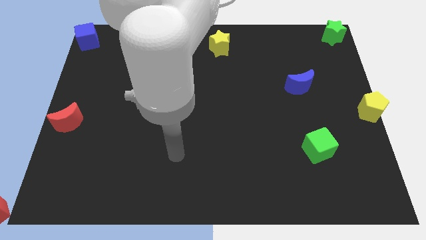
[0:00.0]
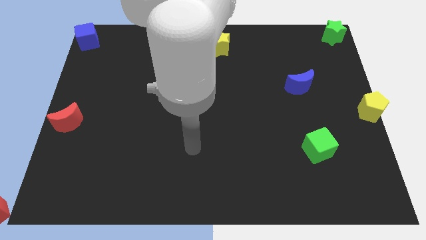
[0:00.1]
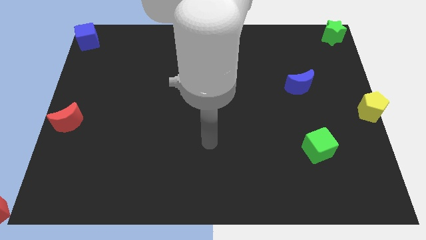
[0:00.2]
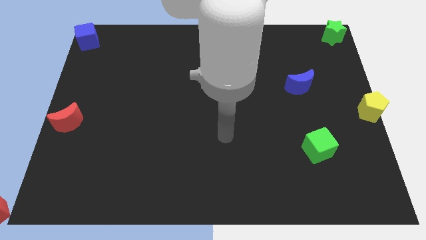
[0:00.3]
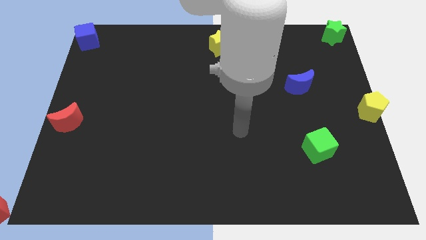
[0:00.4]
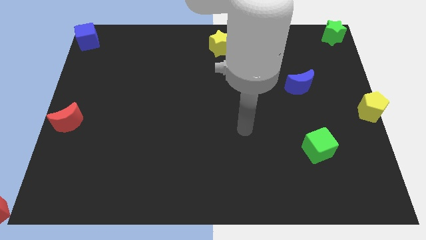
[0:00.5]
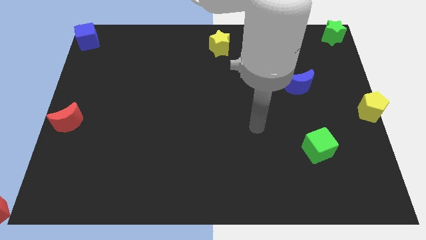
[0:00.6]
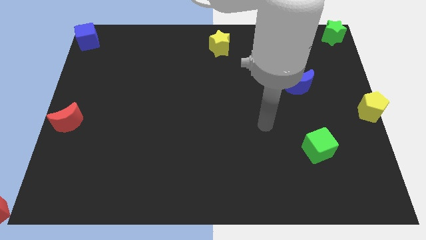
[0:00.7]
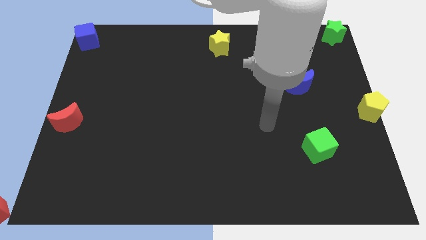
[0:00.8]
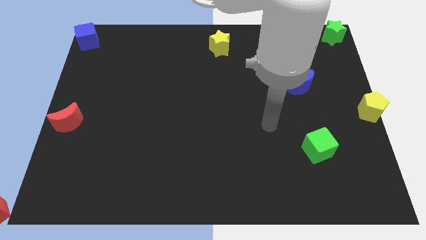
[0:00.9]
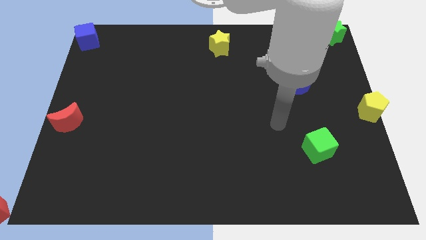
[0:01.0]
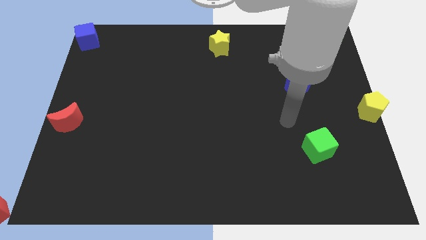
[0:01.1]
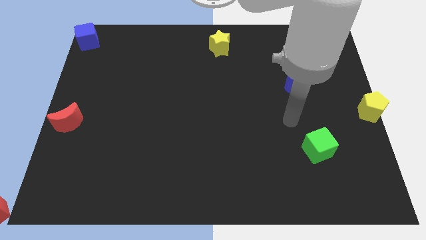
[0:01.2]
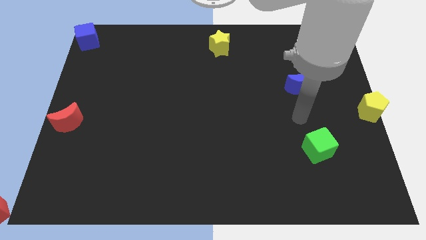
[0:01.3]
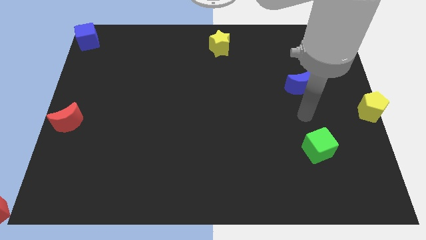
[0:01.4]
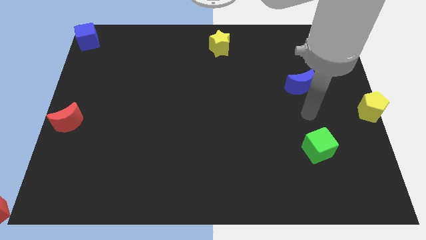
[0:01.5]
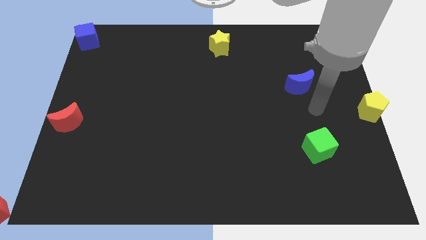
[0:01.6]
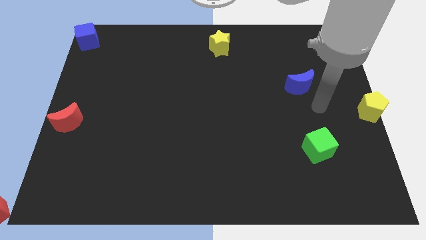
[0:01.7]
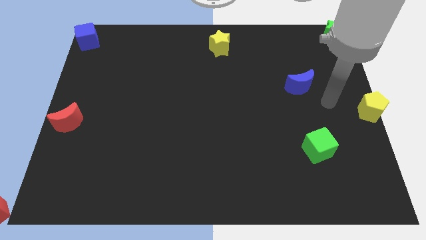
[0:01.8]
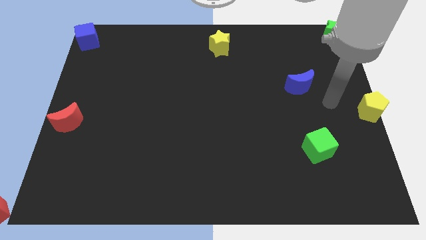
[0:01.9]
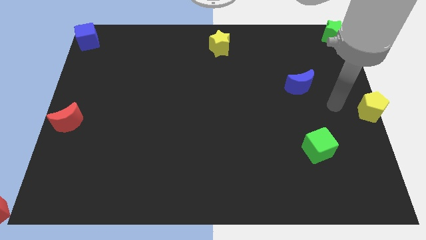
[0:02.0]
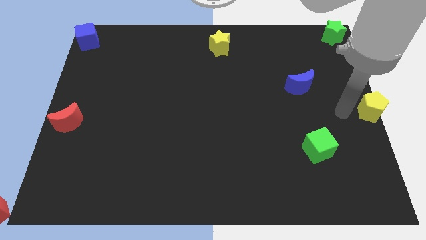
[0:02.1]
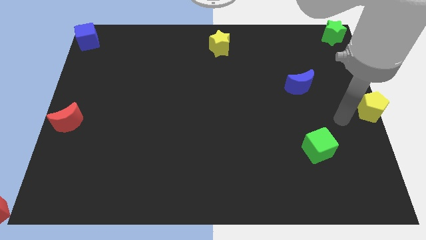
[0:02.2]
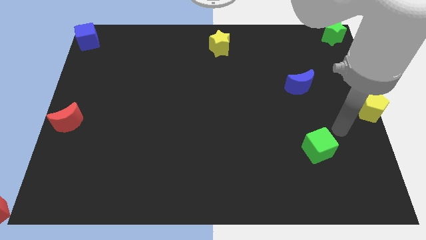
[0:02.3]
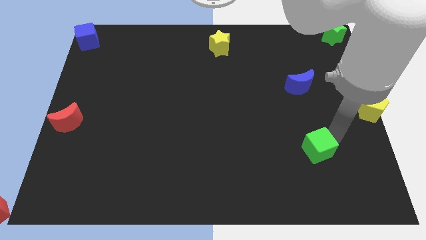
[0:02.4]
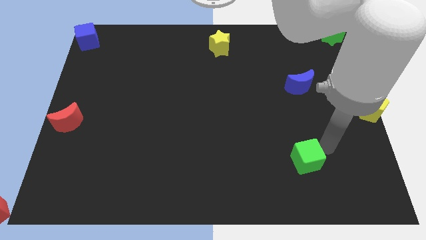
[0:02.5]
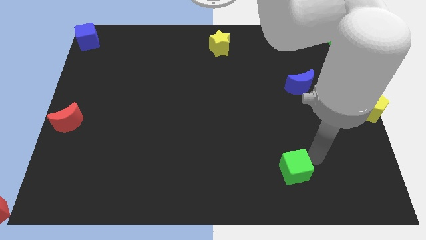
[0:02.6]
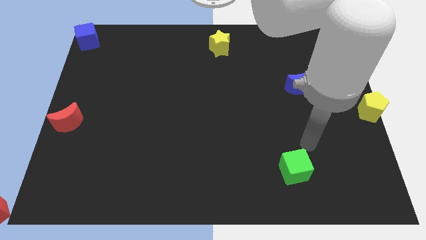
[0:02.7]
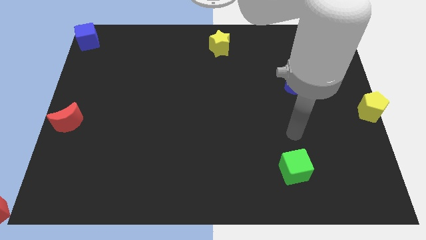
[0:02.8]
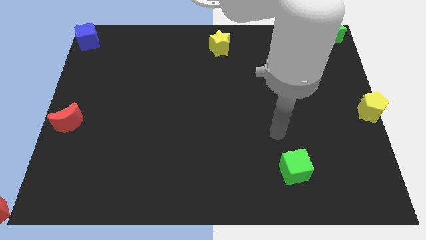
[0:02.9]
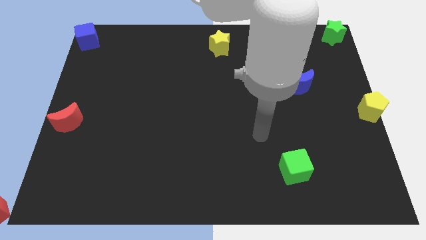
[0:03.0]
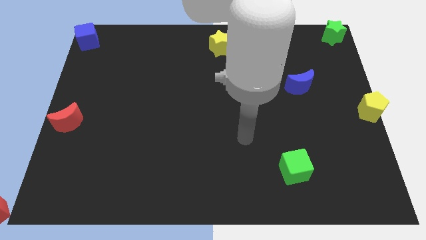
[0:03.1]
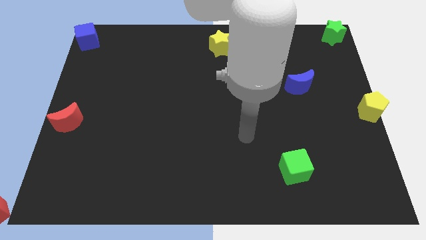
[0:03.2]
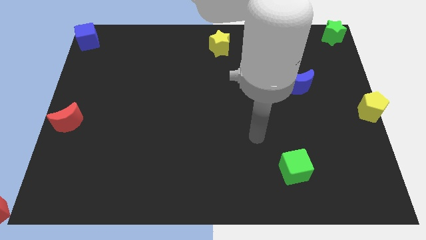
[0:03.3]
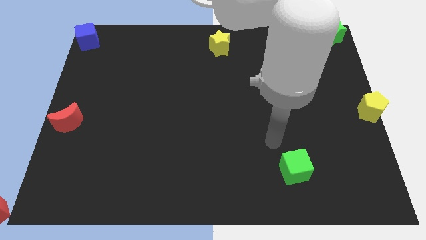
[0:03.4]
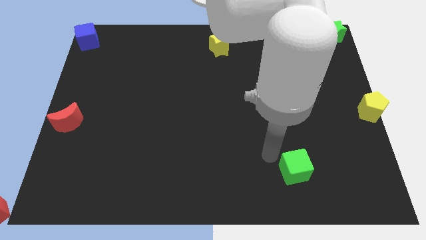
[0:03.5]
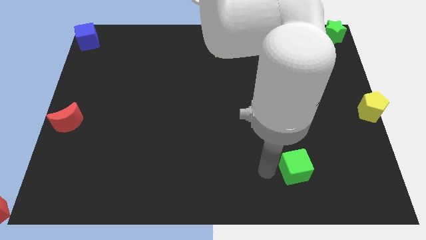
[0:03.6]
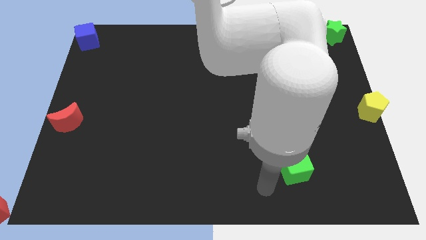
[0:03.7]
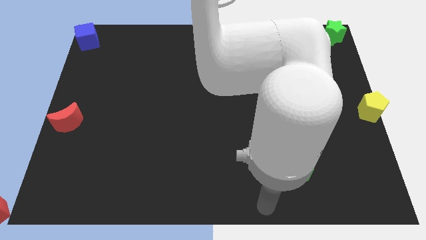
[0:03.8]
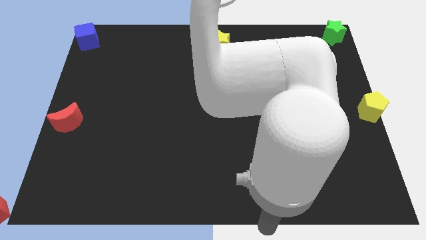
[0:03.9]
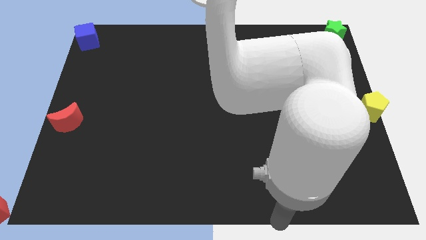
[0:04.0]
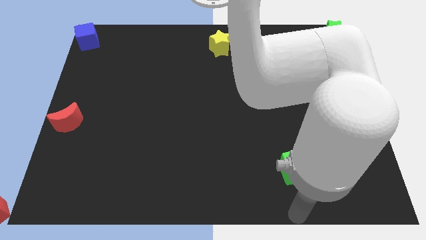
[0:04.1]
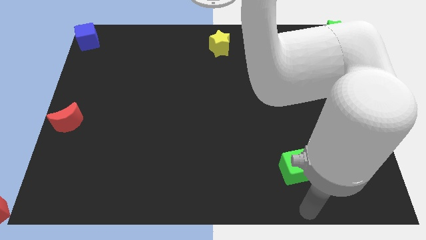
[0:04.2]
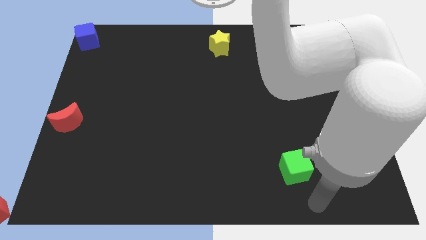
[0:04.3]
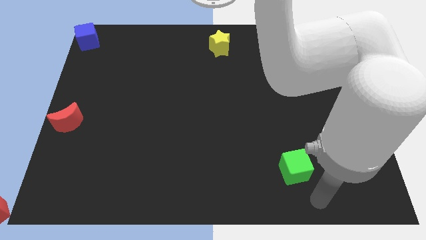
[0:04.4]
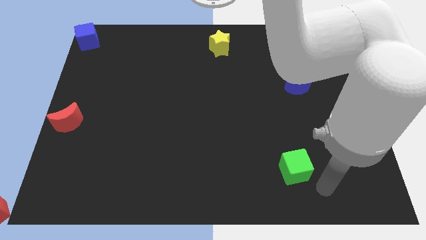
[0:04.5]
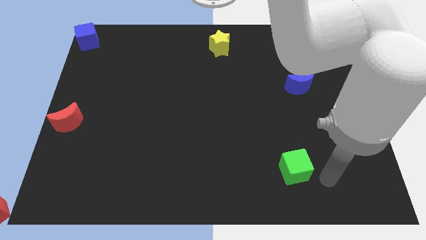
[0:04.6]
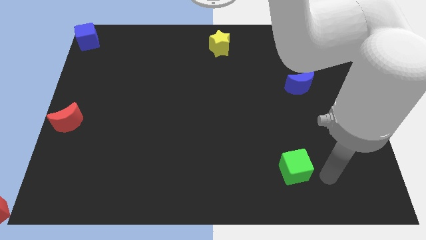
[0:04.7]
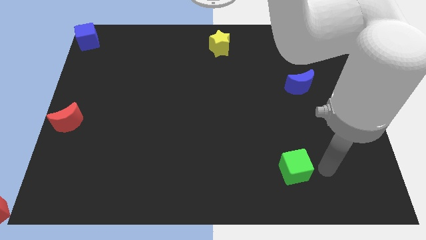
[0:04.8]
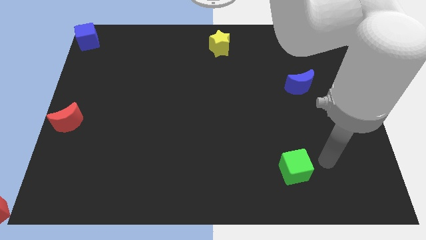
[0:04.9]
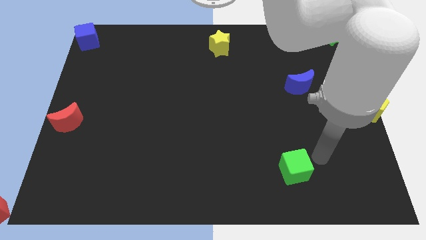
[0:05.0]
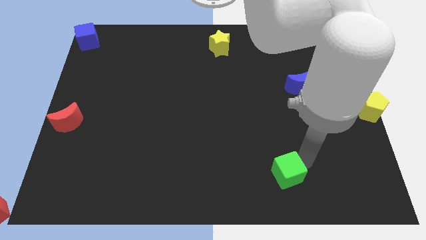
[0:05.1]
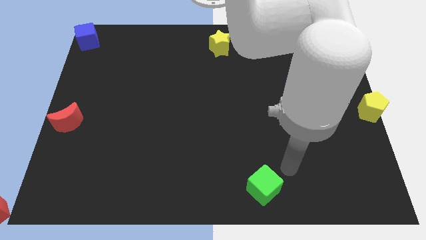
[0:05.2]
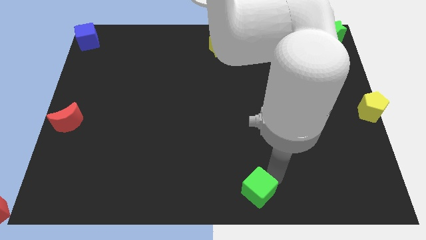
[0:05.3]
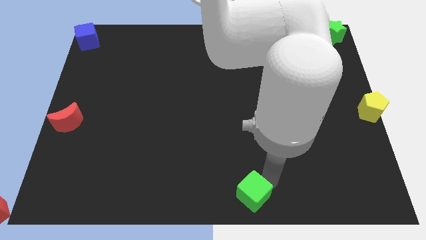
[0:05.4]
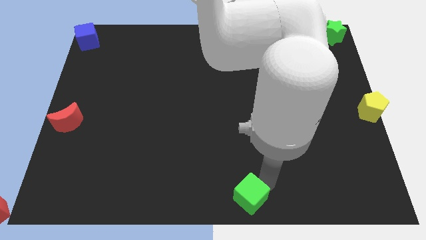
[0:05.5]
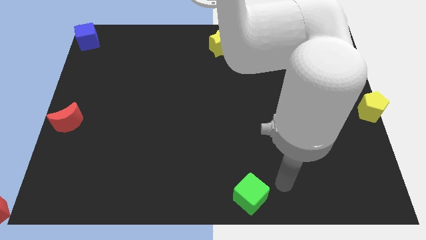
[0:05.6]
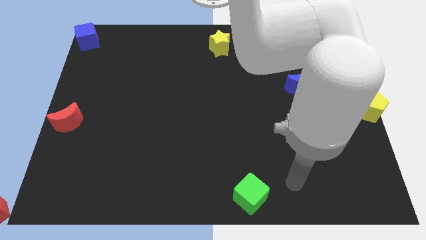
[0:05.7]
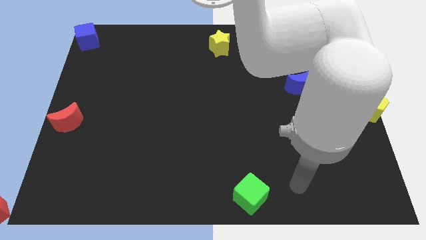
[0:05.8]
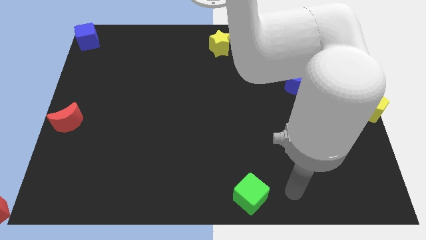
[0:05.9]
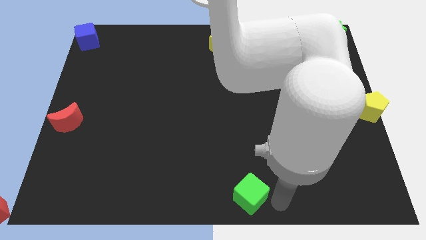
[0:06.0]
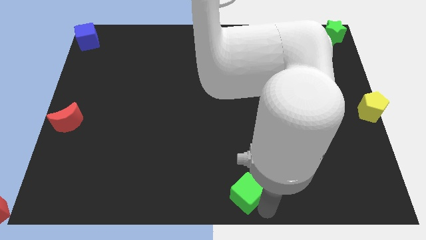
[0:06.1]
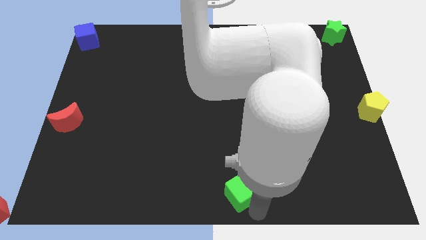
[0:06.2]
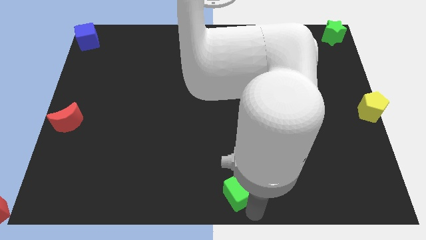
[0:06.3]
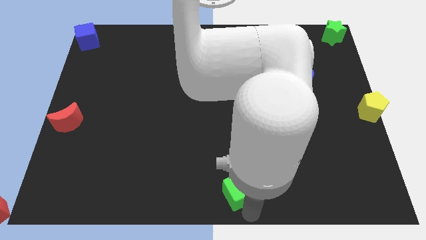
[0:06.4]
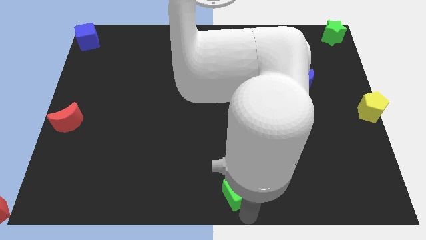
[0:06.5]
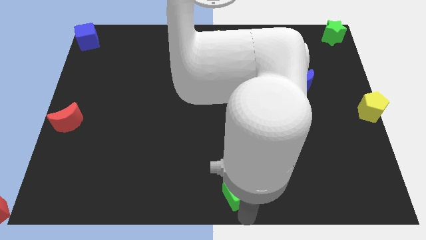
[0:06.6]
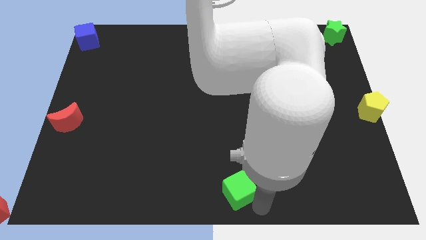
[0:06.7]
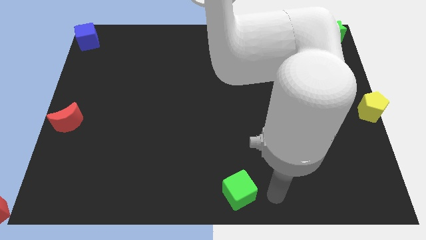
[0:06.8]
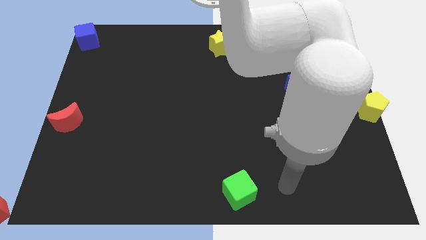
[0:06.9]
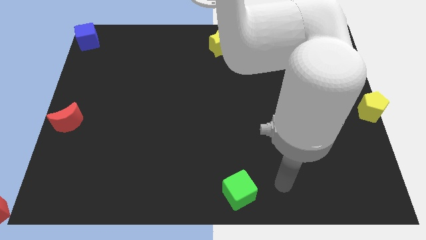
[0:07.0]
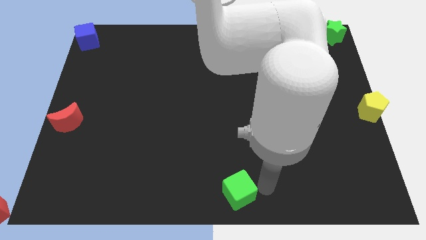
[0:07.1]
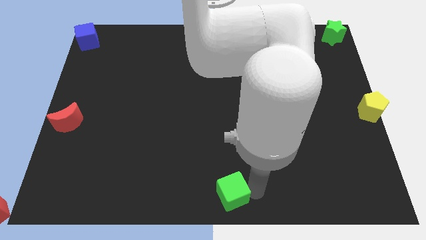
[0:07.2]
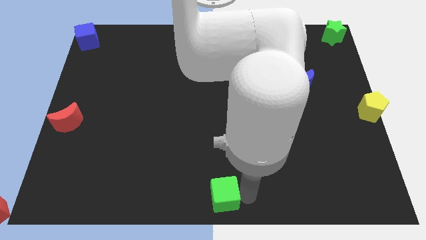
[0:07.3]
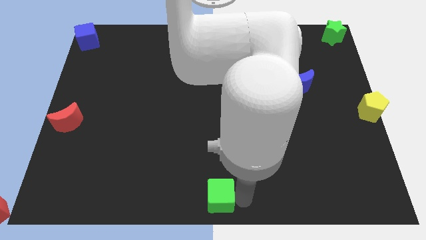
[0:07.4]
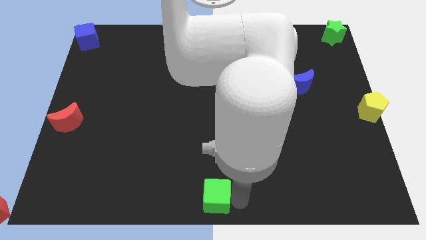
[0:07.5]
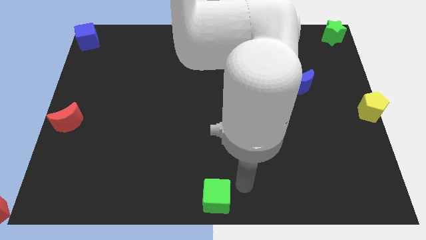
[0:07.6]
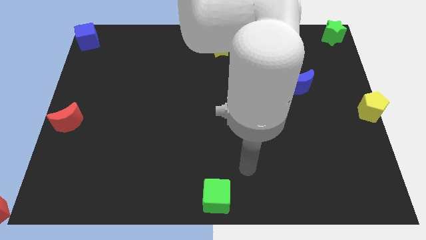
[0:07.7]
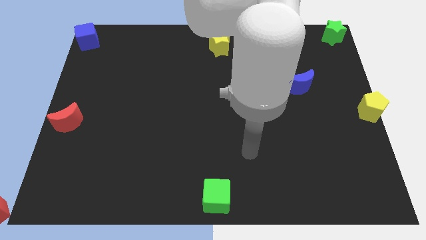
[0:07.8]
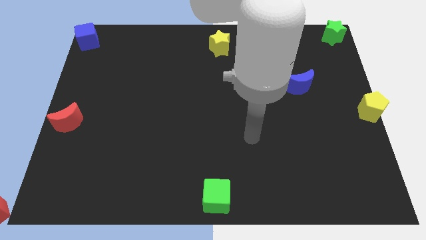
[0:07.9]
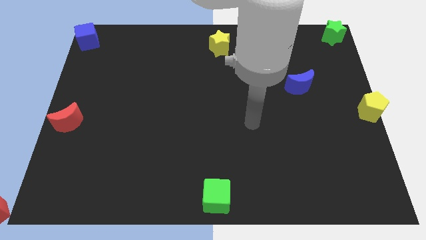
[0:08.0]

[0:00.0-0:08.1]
push the green cube to the bottom center of the board

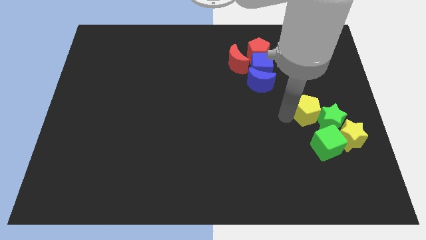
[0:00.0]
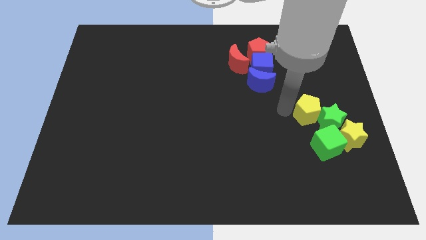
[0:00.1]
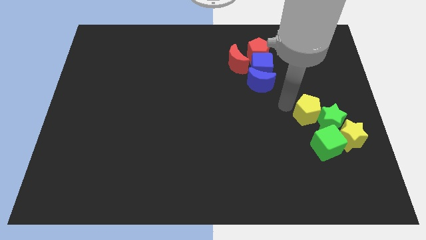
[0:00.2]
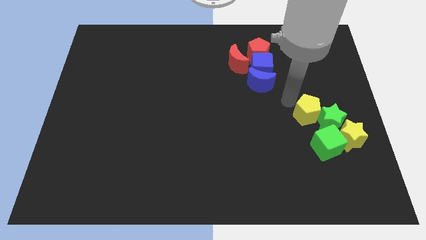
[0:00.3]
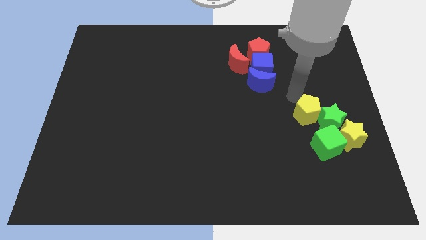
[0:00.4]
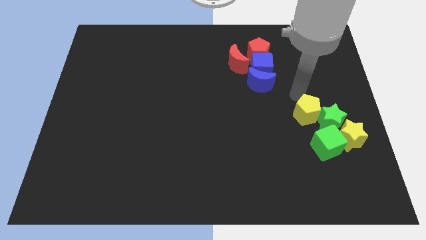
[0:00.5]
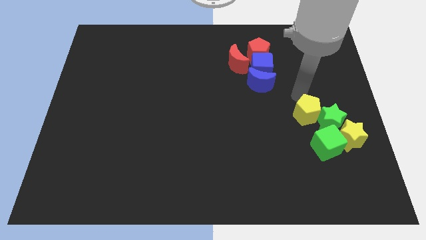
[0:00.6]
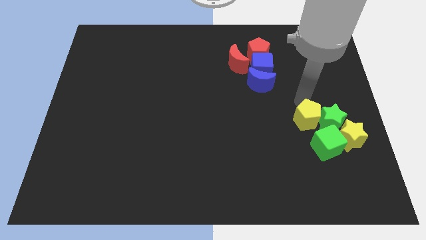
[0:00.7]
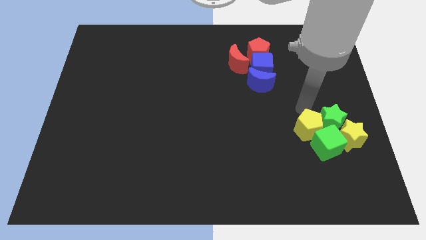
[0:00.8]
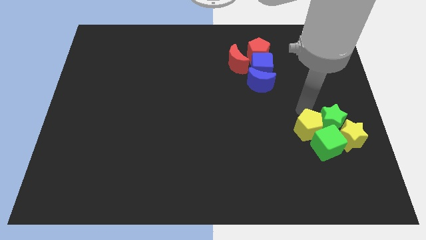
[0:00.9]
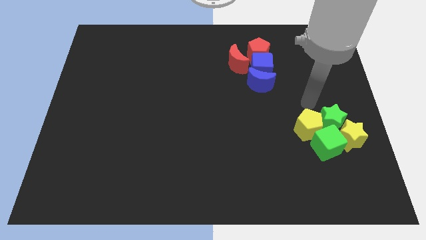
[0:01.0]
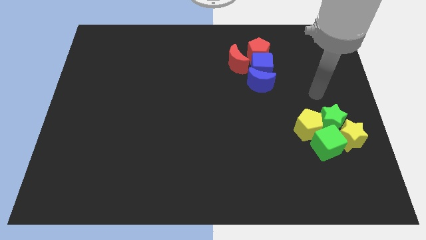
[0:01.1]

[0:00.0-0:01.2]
move the yellow pentagon to the top side of the green cube
